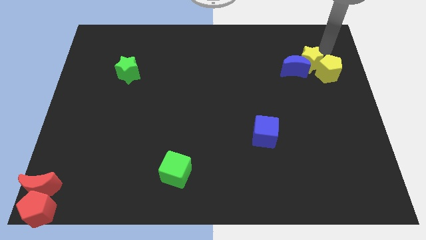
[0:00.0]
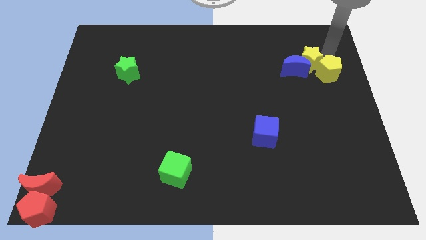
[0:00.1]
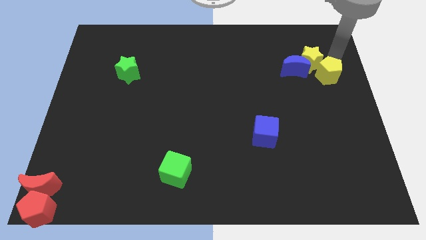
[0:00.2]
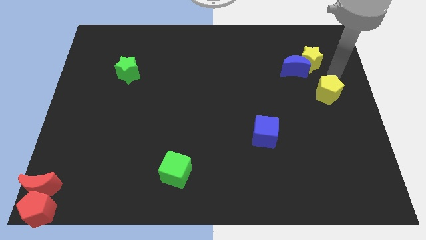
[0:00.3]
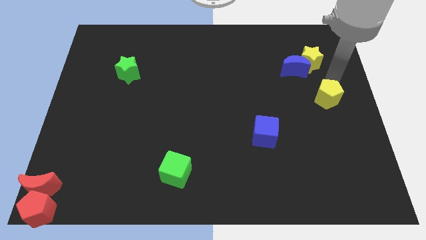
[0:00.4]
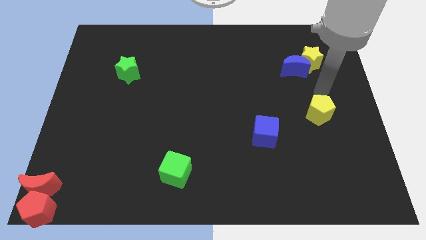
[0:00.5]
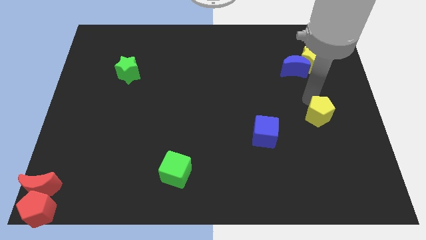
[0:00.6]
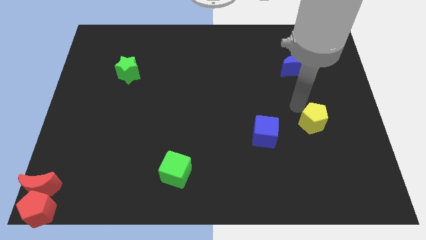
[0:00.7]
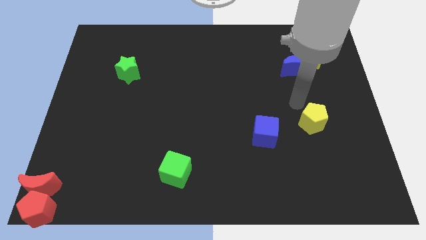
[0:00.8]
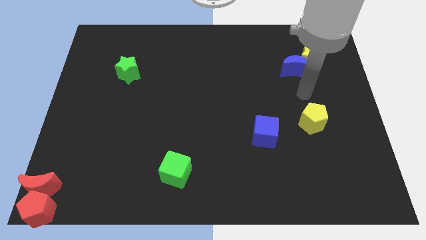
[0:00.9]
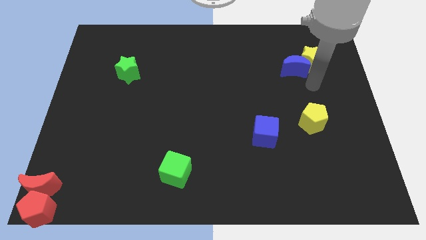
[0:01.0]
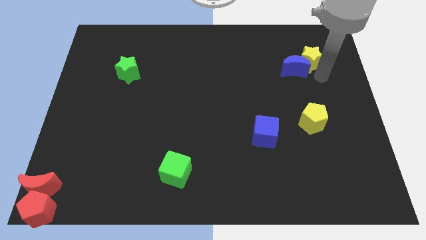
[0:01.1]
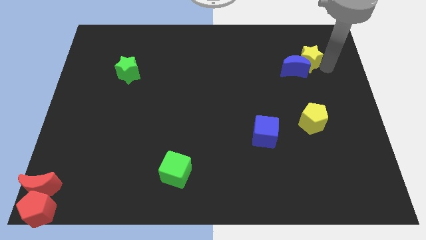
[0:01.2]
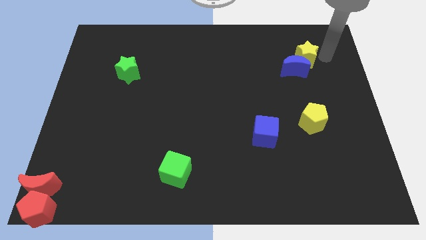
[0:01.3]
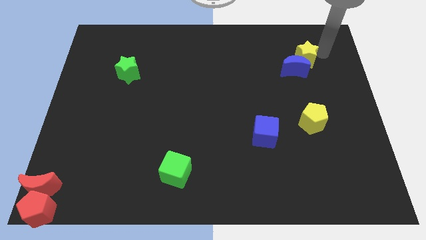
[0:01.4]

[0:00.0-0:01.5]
move the yellow pentagon to the bottom side
